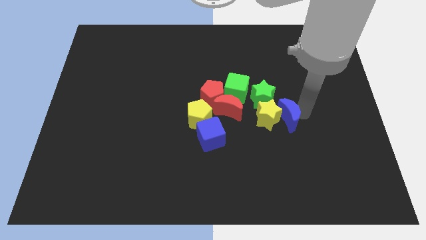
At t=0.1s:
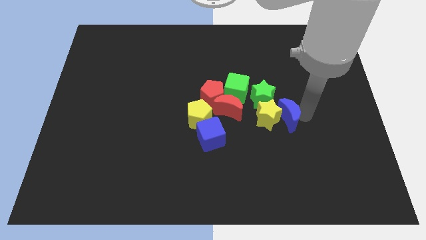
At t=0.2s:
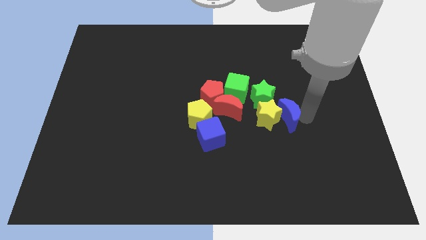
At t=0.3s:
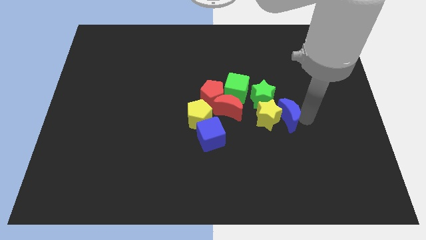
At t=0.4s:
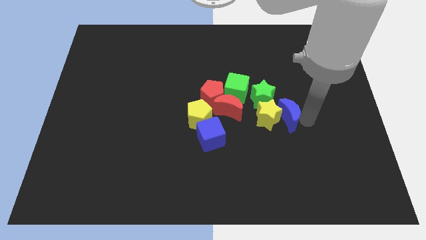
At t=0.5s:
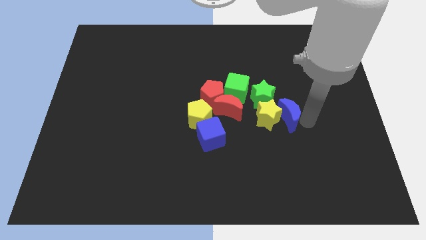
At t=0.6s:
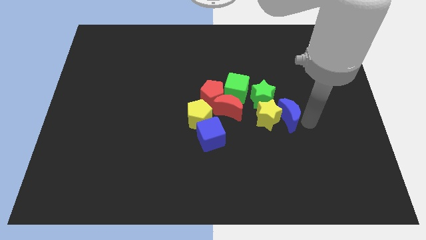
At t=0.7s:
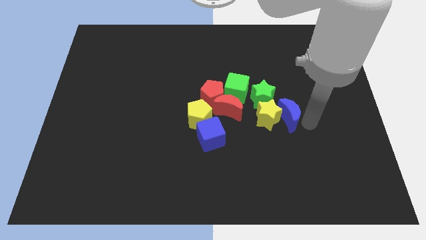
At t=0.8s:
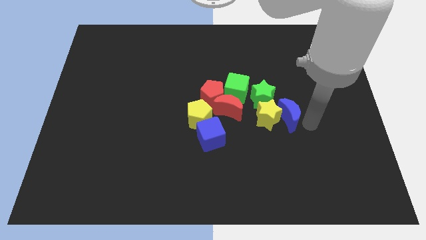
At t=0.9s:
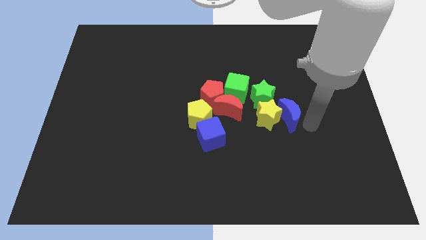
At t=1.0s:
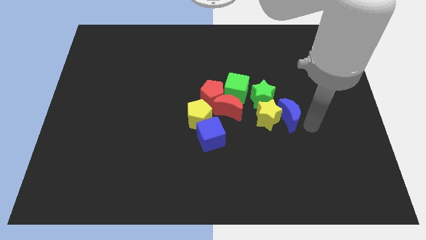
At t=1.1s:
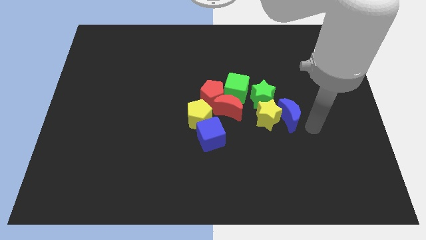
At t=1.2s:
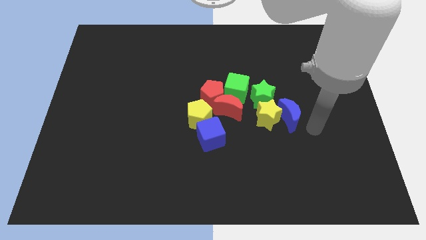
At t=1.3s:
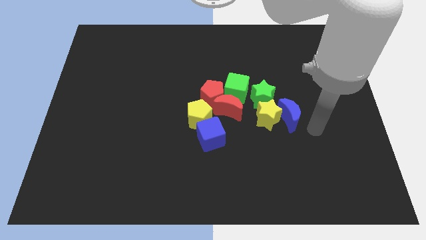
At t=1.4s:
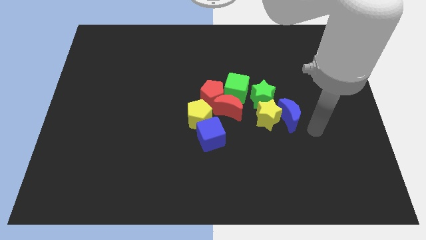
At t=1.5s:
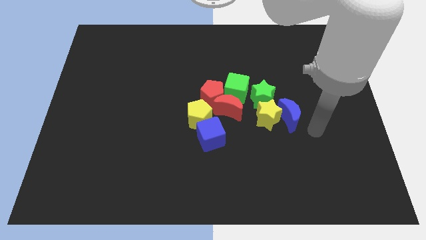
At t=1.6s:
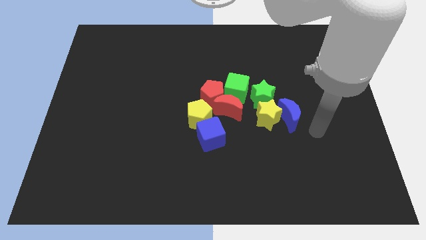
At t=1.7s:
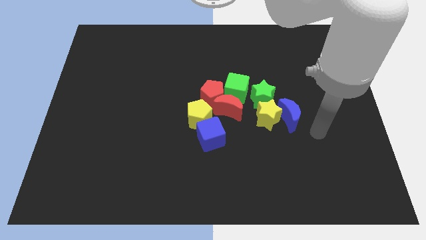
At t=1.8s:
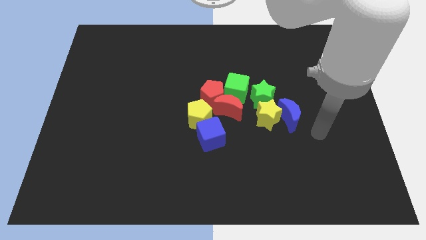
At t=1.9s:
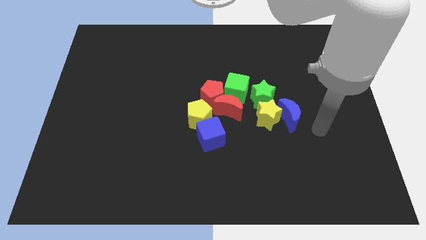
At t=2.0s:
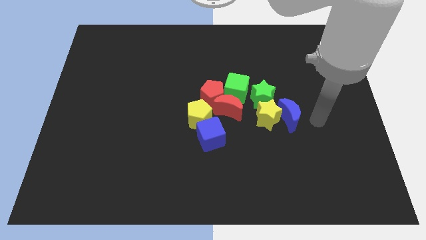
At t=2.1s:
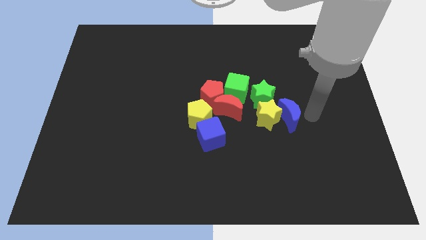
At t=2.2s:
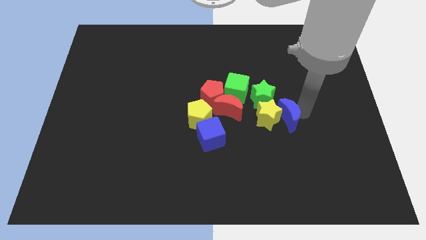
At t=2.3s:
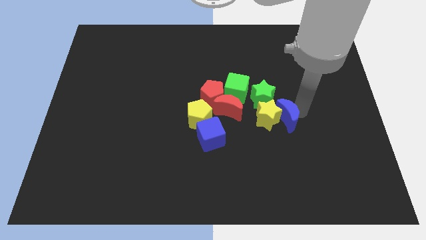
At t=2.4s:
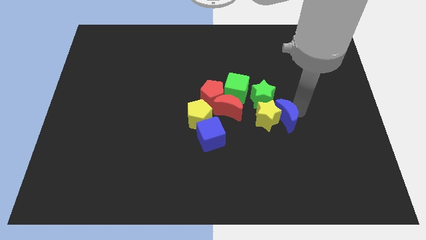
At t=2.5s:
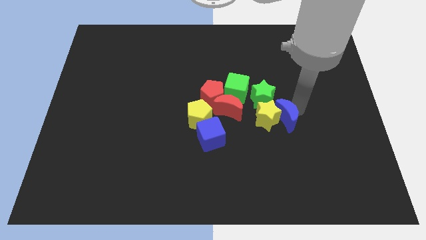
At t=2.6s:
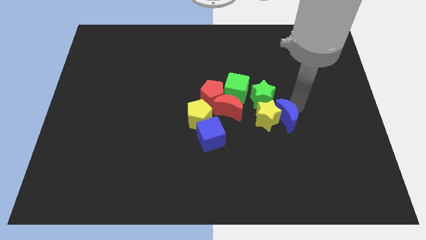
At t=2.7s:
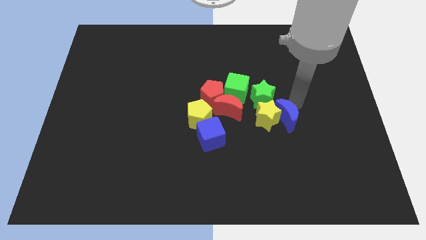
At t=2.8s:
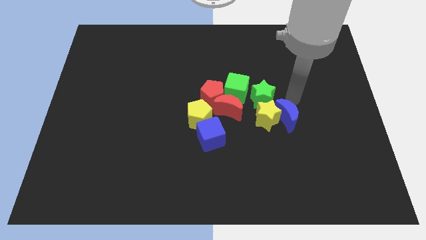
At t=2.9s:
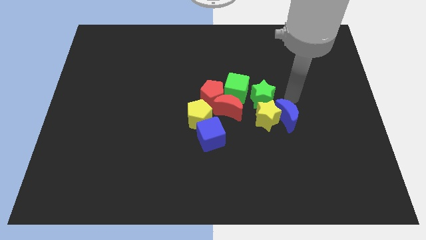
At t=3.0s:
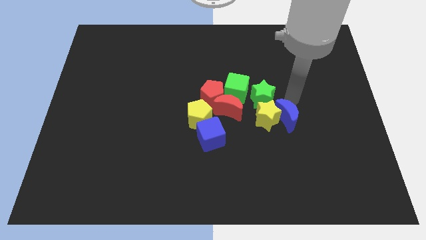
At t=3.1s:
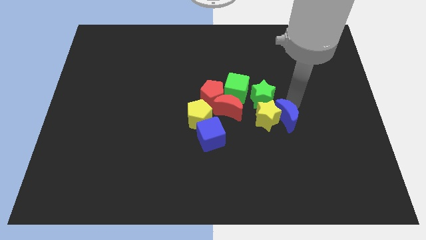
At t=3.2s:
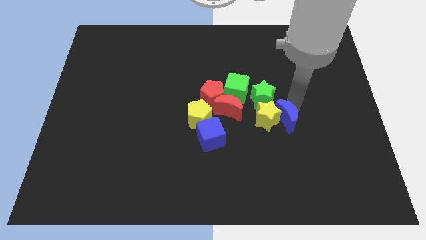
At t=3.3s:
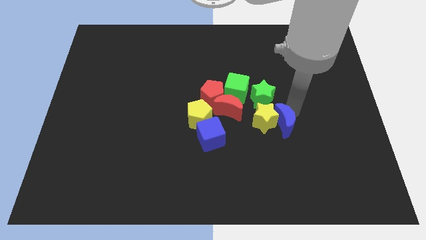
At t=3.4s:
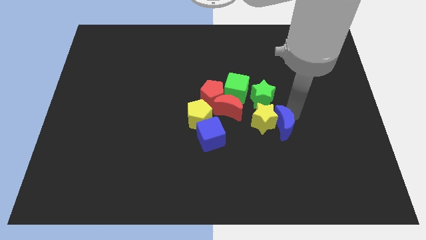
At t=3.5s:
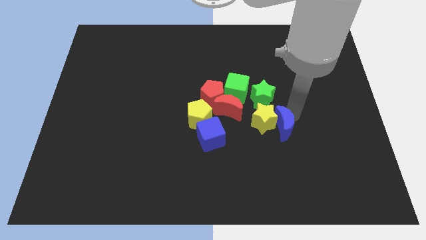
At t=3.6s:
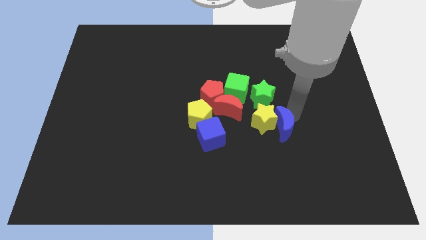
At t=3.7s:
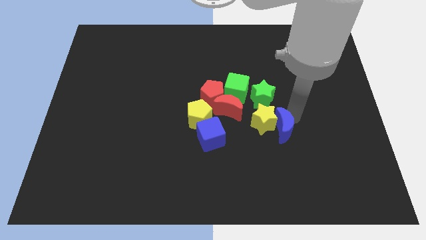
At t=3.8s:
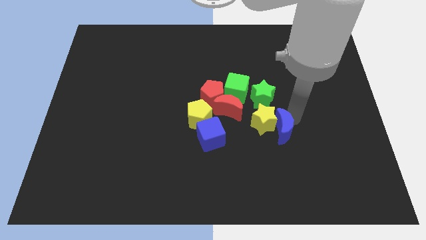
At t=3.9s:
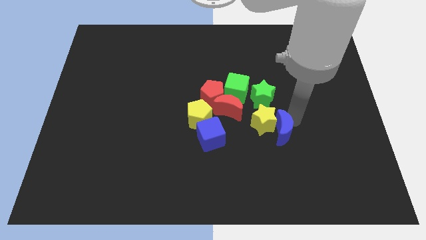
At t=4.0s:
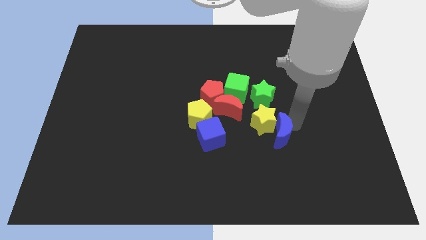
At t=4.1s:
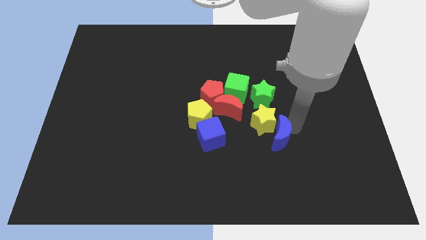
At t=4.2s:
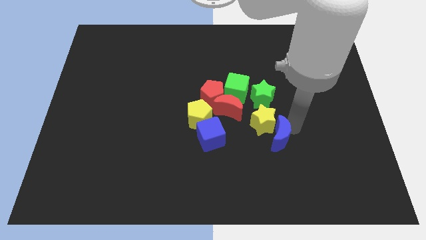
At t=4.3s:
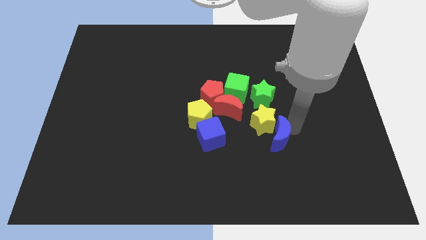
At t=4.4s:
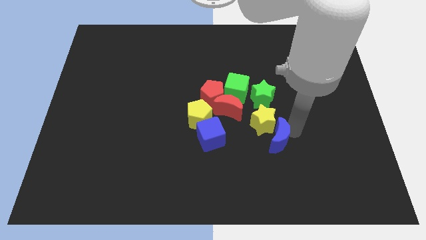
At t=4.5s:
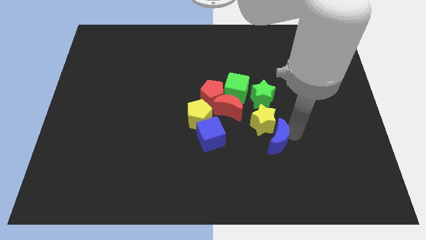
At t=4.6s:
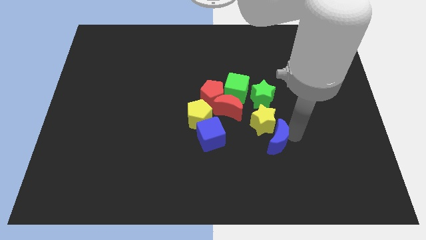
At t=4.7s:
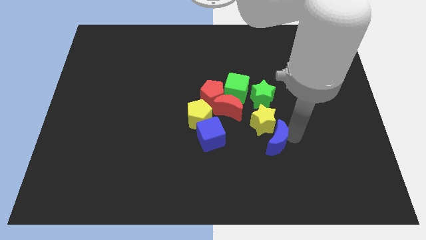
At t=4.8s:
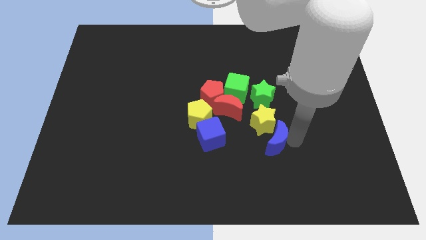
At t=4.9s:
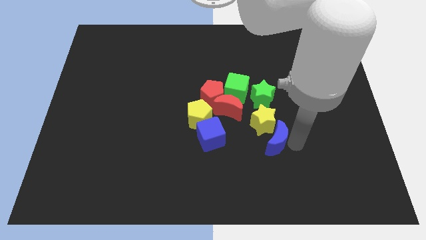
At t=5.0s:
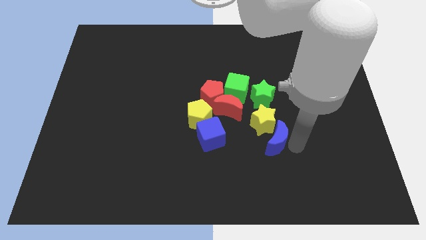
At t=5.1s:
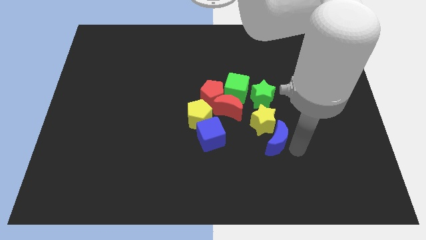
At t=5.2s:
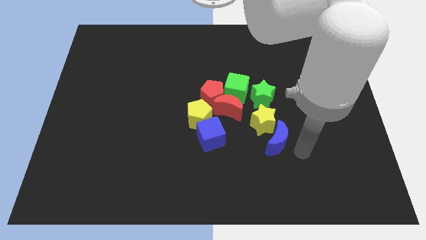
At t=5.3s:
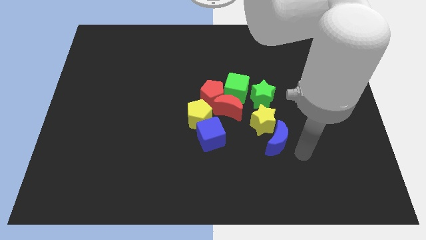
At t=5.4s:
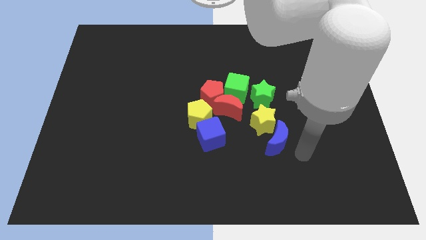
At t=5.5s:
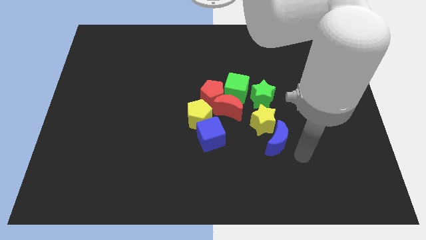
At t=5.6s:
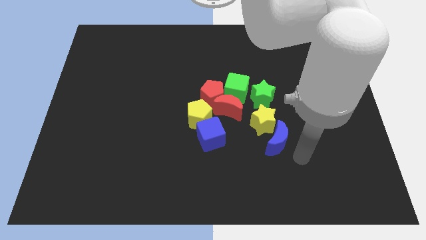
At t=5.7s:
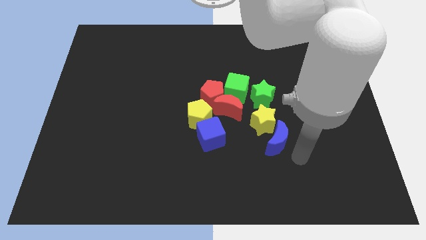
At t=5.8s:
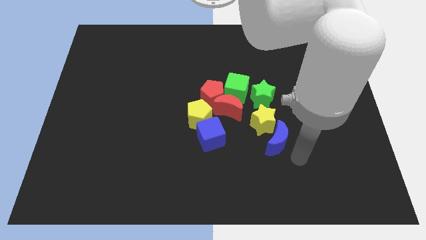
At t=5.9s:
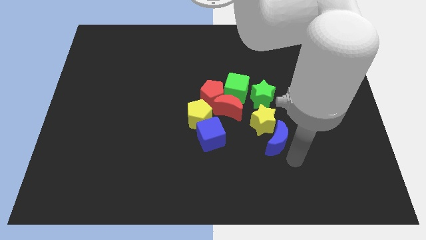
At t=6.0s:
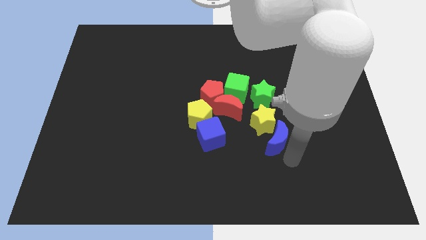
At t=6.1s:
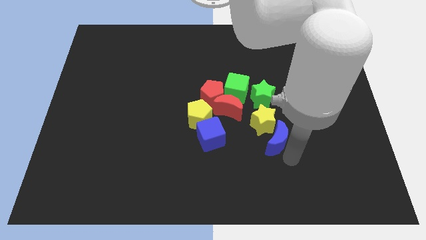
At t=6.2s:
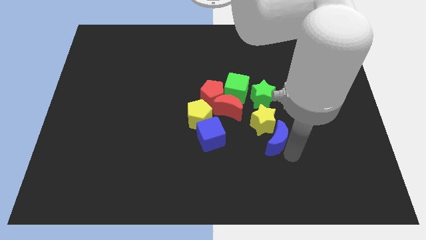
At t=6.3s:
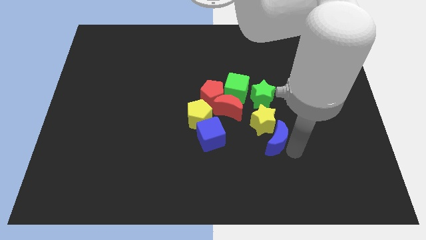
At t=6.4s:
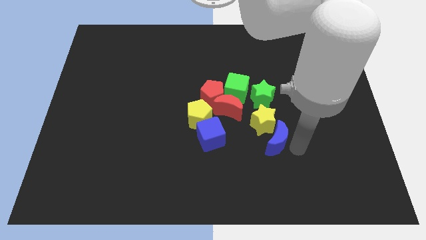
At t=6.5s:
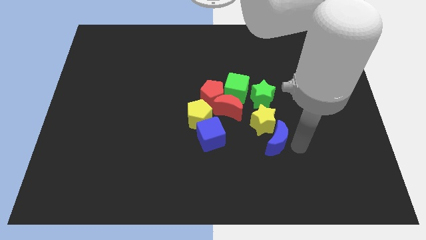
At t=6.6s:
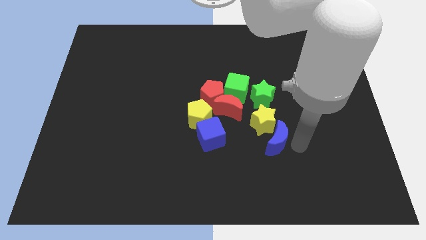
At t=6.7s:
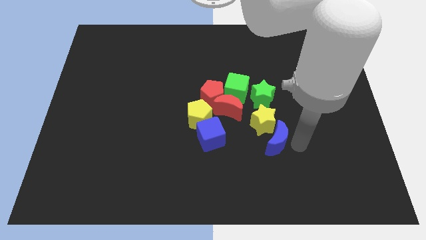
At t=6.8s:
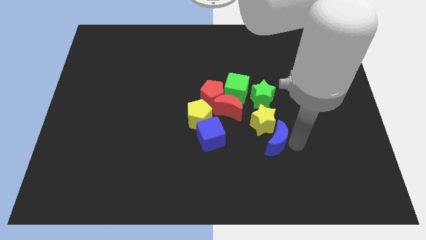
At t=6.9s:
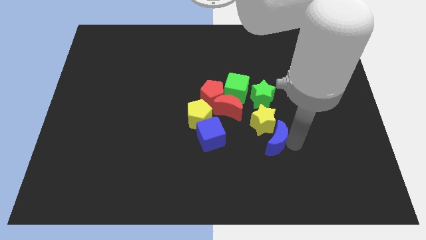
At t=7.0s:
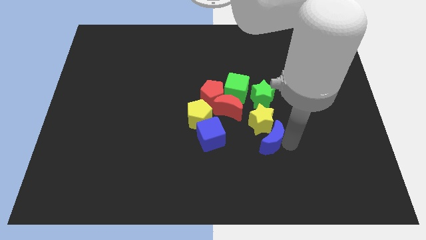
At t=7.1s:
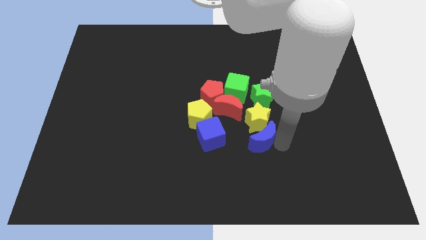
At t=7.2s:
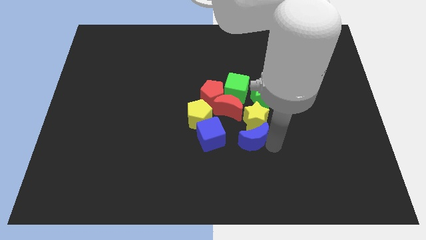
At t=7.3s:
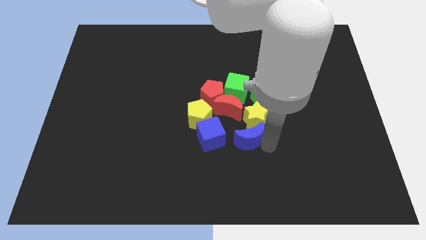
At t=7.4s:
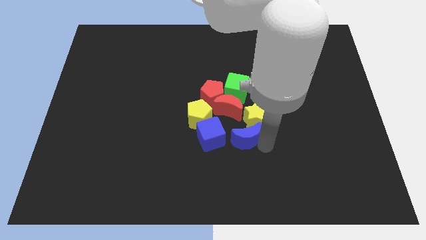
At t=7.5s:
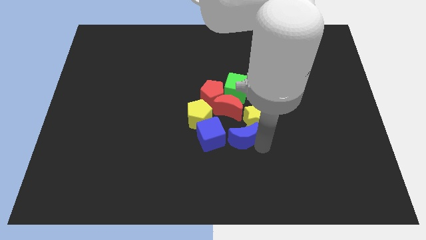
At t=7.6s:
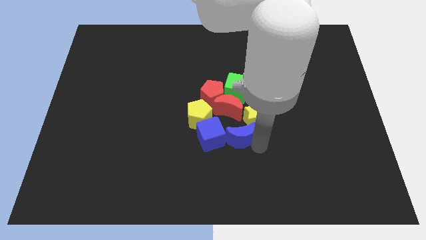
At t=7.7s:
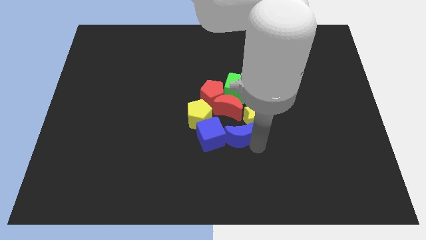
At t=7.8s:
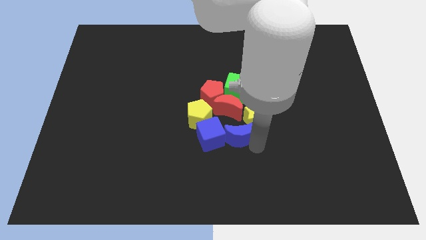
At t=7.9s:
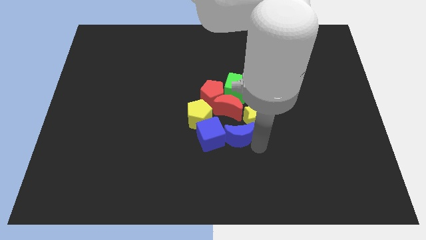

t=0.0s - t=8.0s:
push the blue moon into the right side of the blue cube

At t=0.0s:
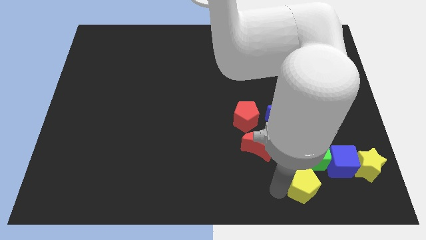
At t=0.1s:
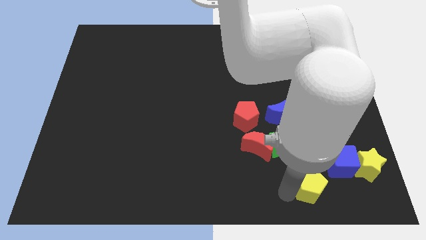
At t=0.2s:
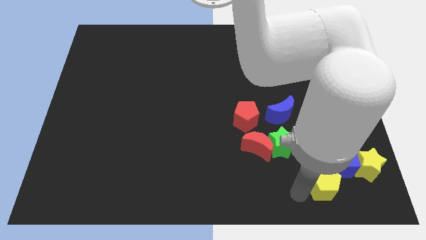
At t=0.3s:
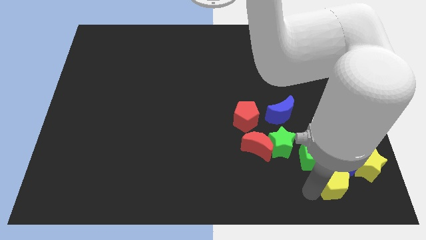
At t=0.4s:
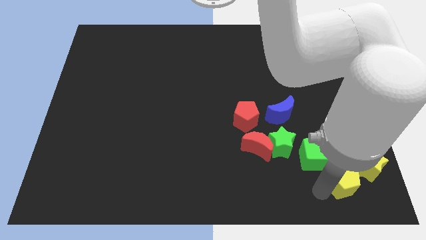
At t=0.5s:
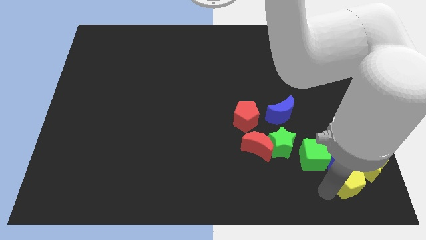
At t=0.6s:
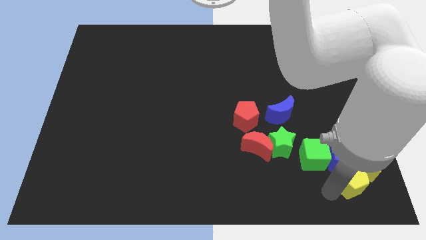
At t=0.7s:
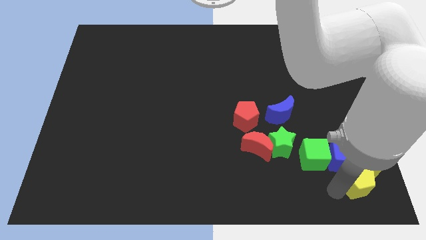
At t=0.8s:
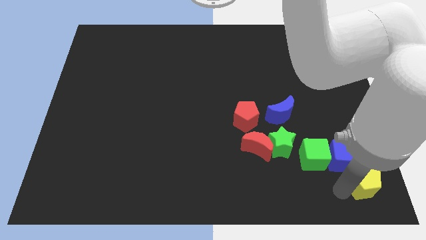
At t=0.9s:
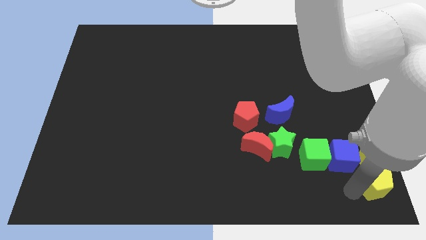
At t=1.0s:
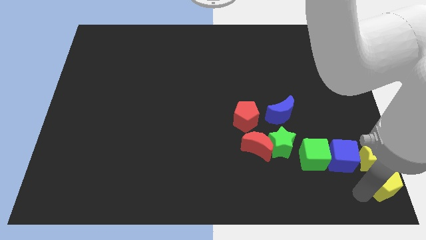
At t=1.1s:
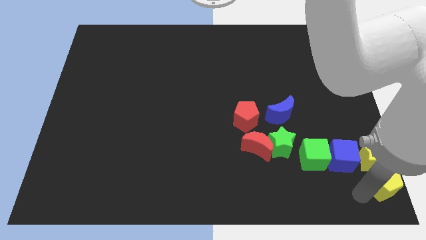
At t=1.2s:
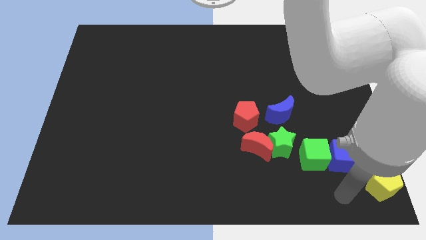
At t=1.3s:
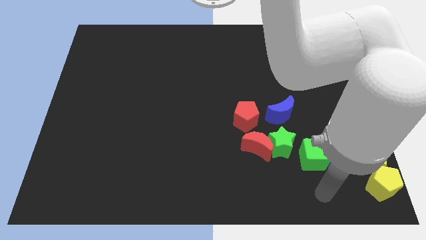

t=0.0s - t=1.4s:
push the yellow pentagon to the bottom right of the board
